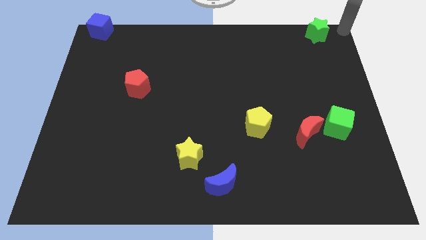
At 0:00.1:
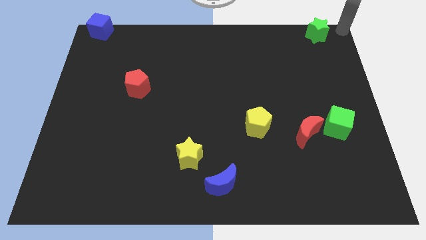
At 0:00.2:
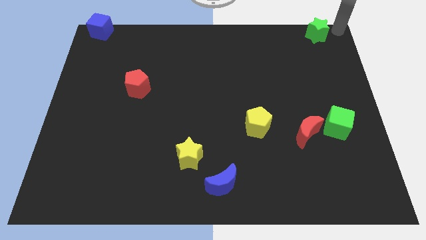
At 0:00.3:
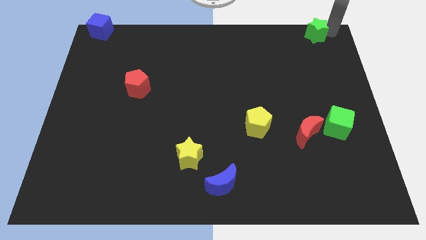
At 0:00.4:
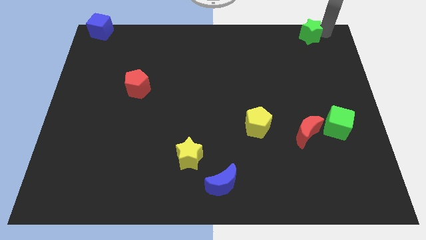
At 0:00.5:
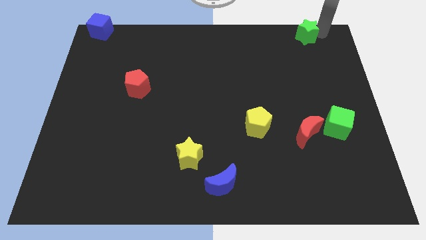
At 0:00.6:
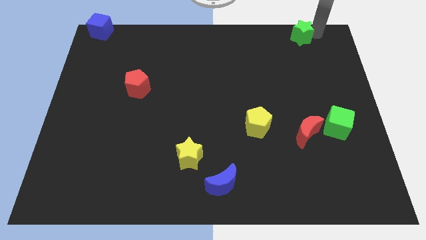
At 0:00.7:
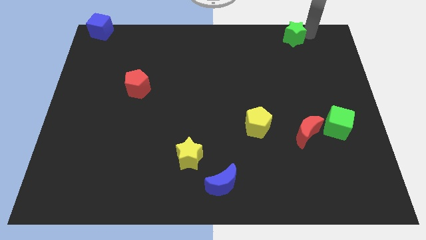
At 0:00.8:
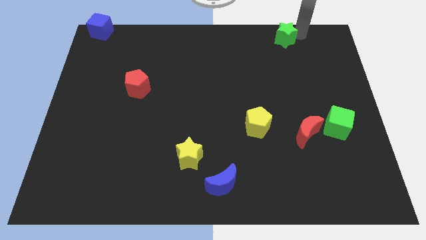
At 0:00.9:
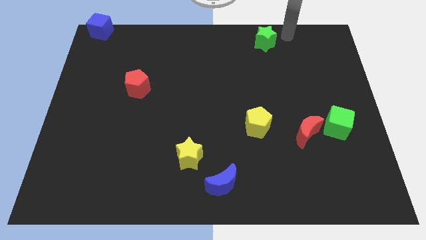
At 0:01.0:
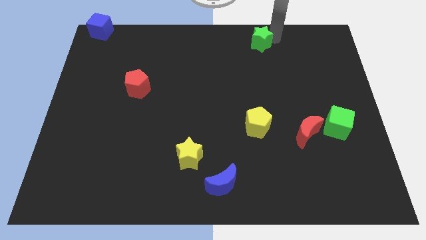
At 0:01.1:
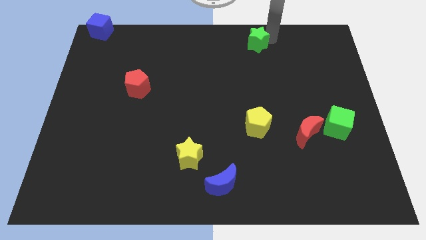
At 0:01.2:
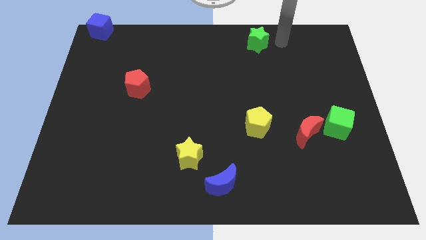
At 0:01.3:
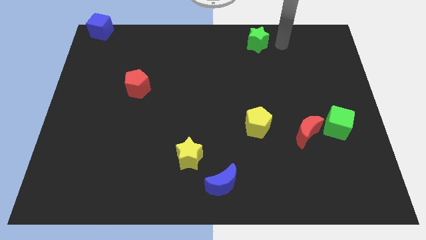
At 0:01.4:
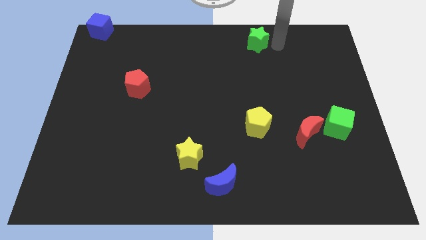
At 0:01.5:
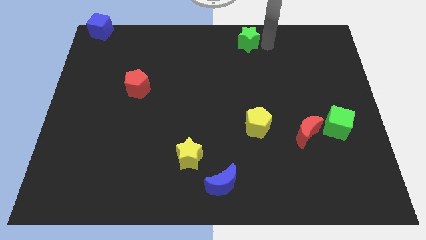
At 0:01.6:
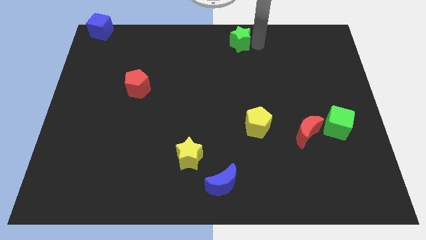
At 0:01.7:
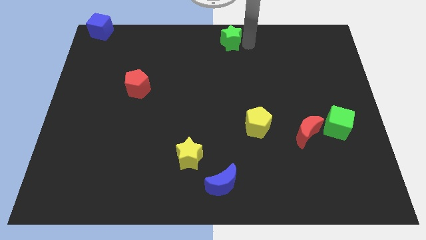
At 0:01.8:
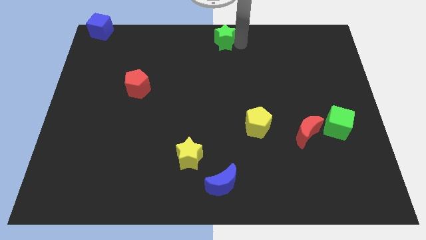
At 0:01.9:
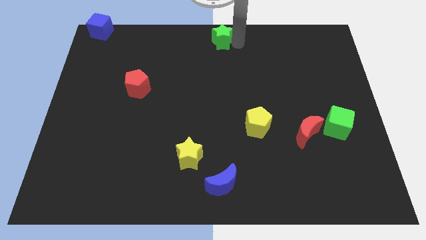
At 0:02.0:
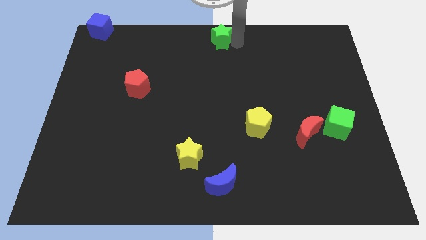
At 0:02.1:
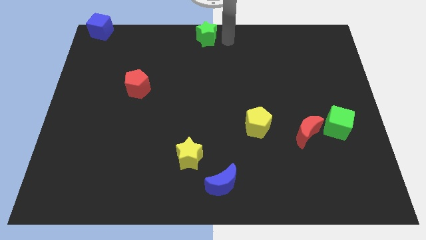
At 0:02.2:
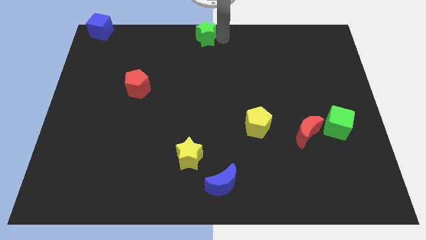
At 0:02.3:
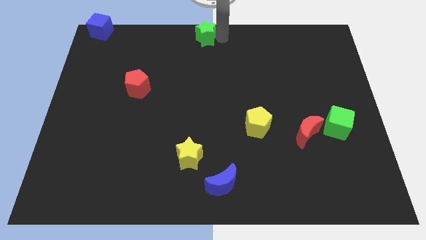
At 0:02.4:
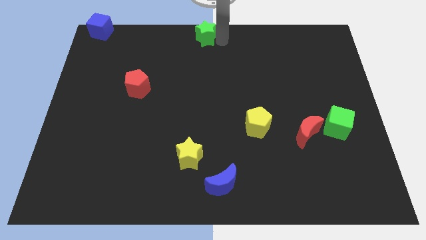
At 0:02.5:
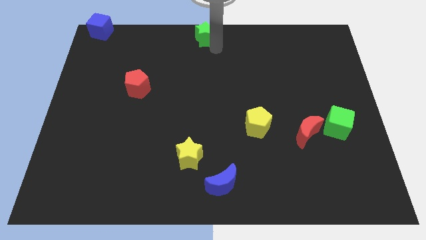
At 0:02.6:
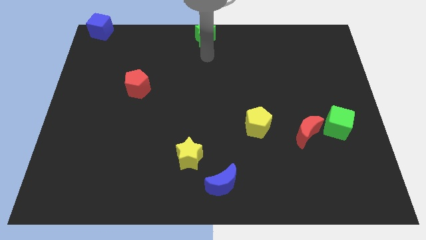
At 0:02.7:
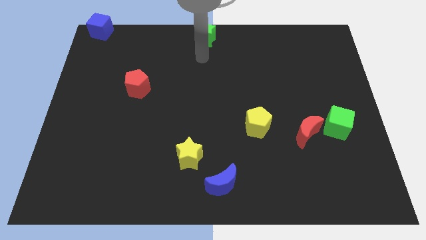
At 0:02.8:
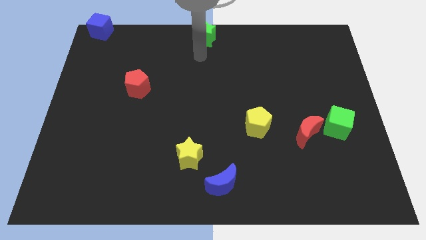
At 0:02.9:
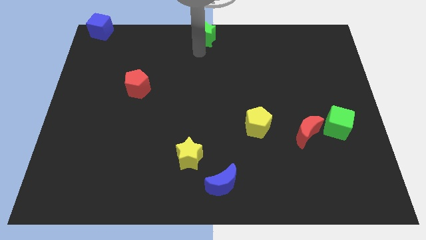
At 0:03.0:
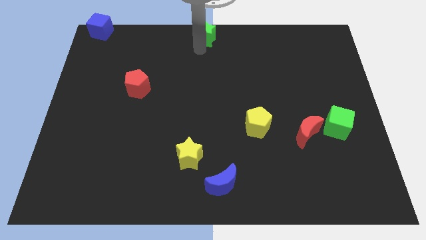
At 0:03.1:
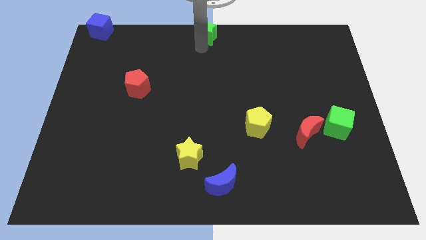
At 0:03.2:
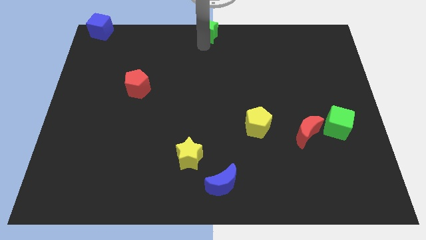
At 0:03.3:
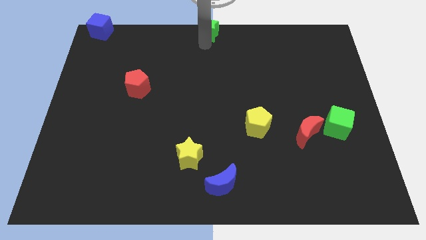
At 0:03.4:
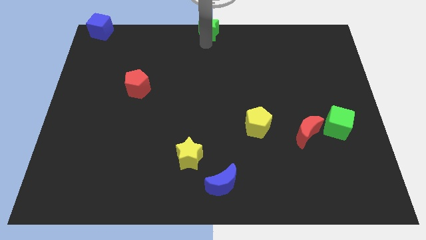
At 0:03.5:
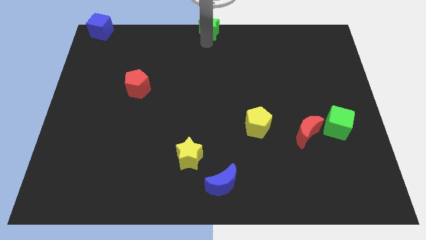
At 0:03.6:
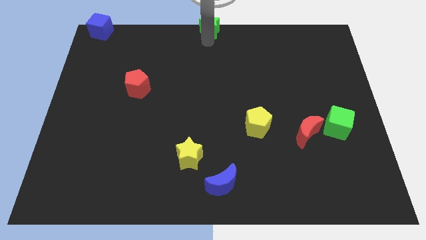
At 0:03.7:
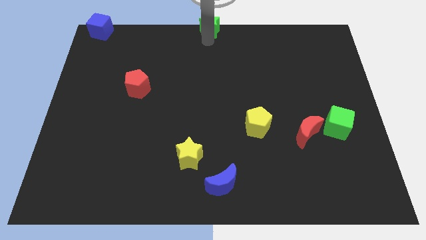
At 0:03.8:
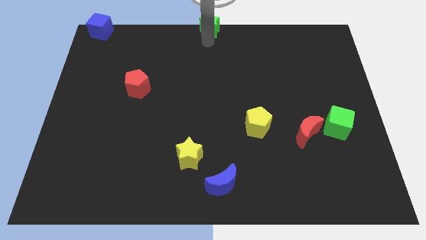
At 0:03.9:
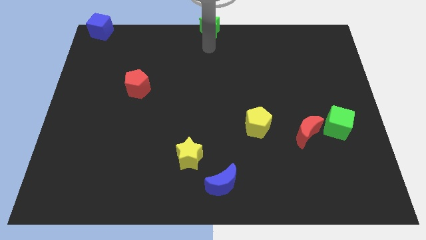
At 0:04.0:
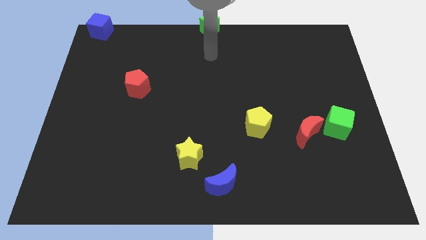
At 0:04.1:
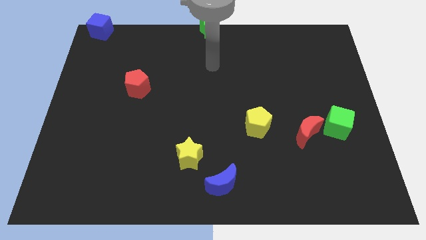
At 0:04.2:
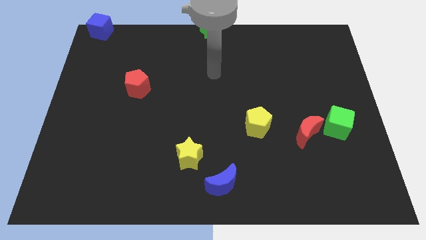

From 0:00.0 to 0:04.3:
push the green star to the top middle of the board

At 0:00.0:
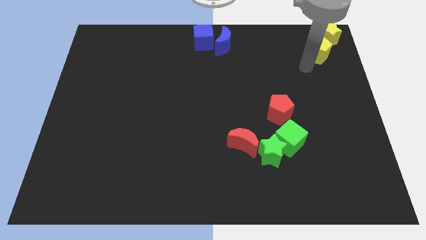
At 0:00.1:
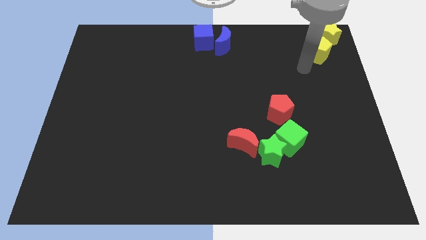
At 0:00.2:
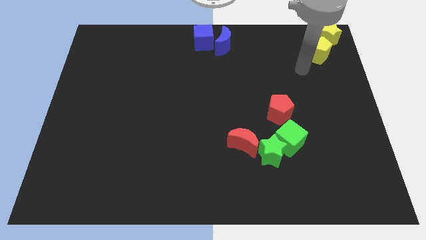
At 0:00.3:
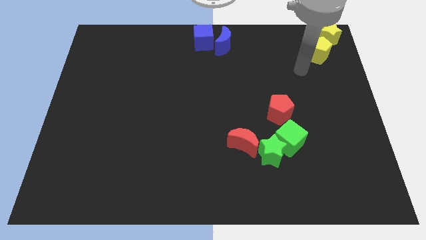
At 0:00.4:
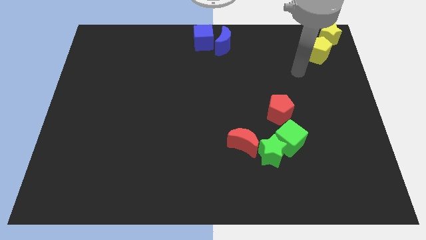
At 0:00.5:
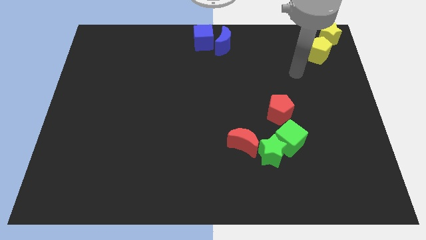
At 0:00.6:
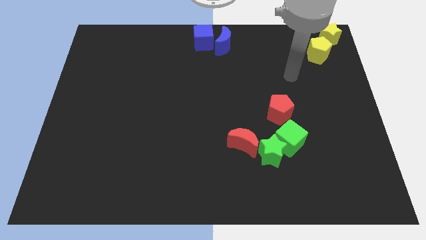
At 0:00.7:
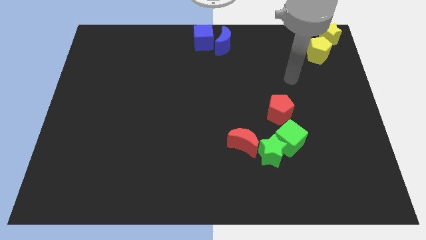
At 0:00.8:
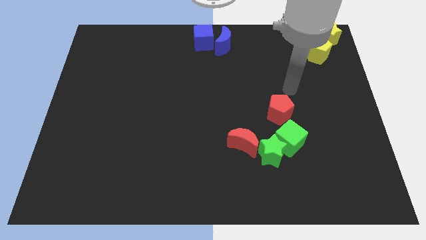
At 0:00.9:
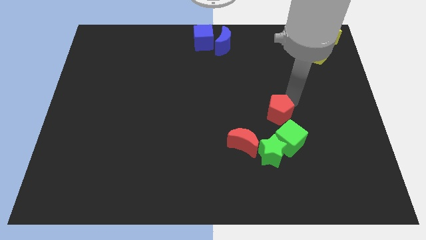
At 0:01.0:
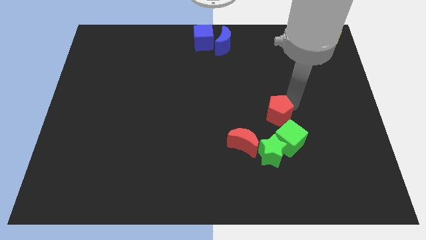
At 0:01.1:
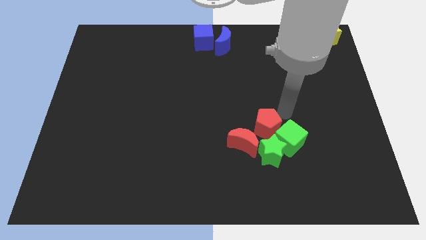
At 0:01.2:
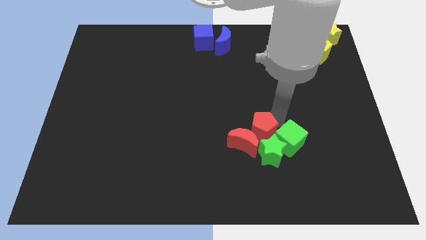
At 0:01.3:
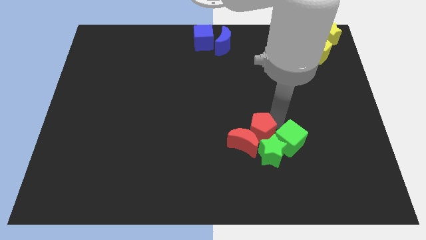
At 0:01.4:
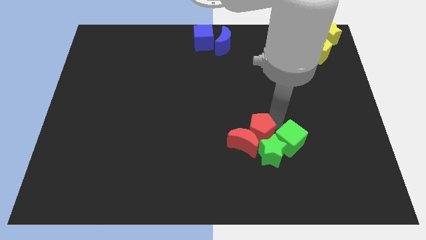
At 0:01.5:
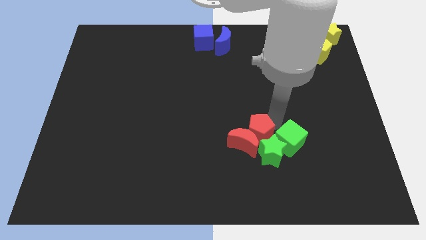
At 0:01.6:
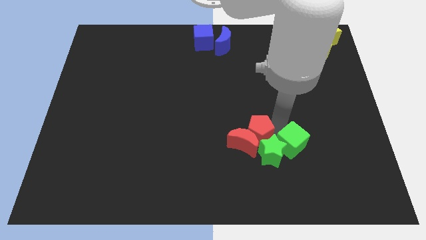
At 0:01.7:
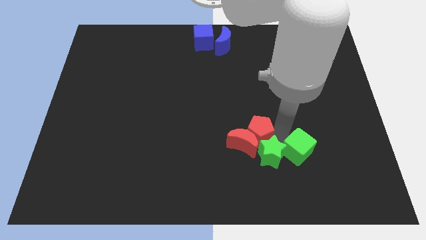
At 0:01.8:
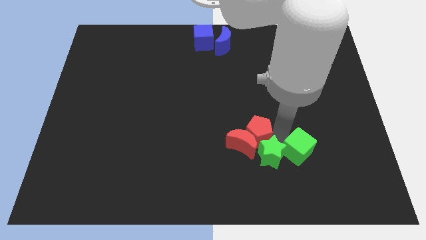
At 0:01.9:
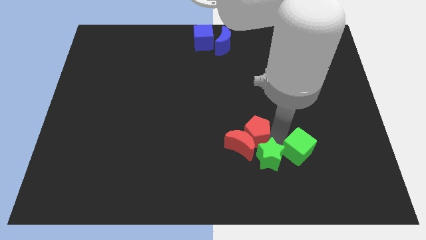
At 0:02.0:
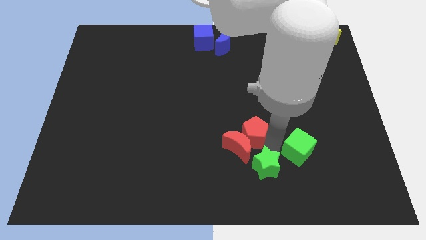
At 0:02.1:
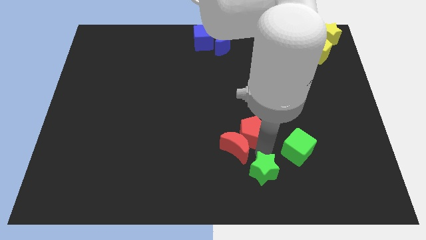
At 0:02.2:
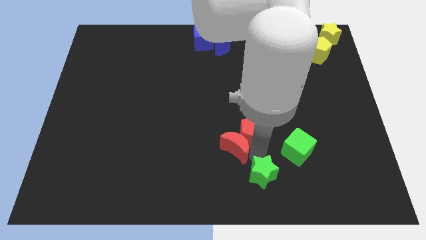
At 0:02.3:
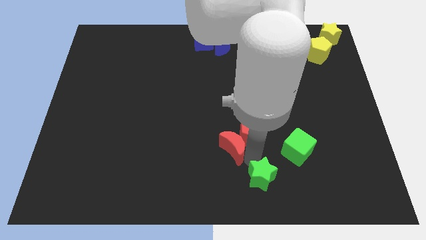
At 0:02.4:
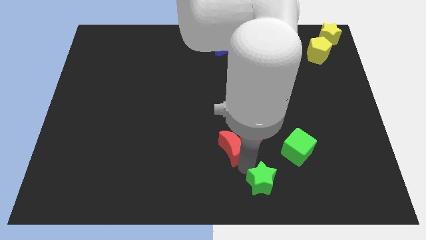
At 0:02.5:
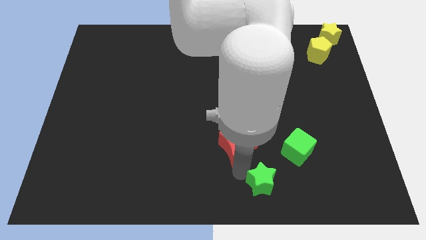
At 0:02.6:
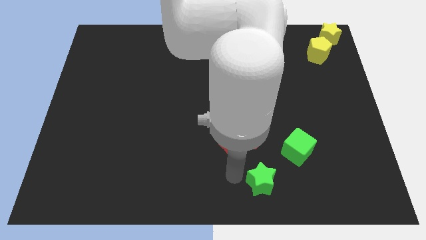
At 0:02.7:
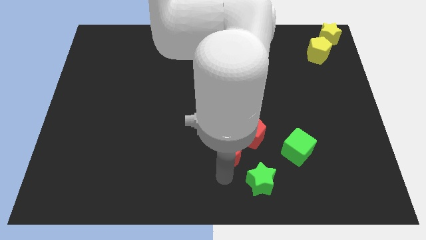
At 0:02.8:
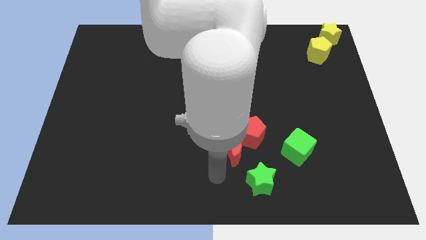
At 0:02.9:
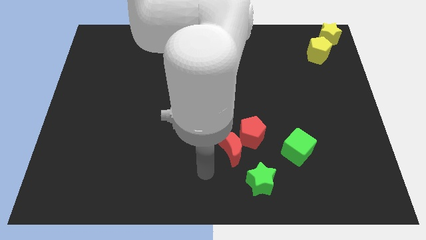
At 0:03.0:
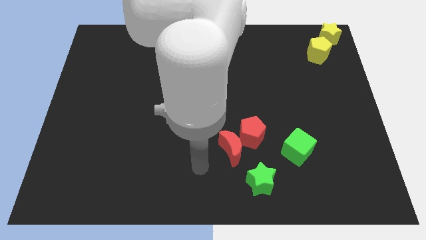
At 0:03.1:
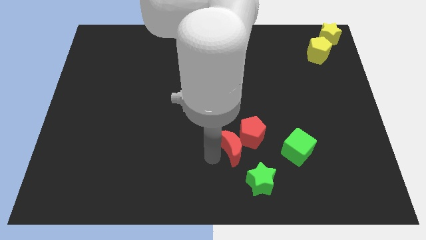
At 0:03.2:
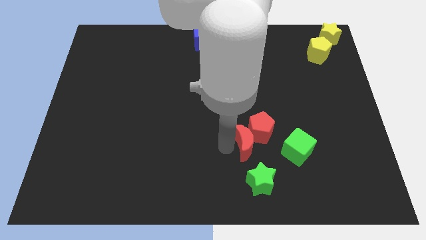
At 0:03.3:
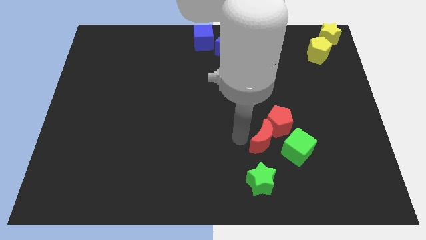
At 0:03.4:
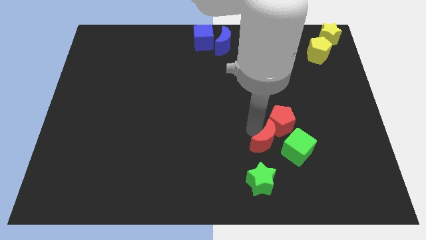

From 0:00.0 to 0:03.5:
group up the red blocks separately from the green blocks

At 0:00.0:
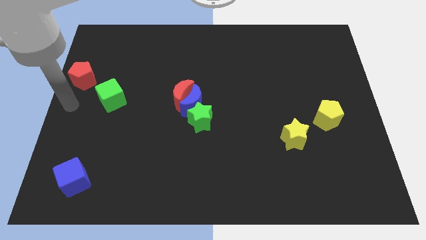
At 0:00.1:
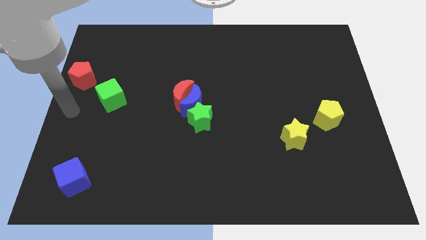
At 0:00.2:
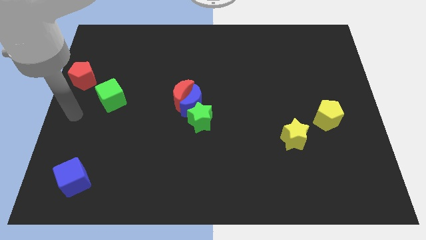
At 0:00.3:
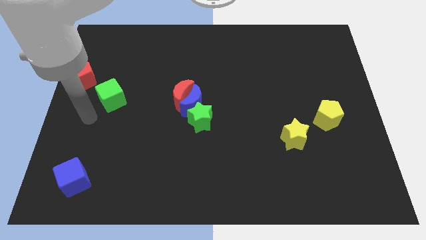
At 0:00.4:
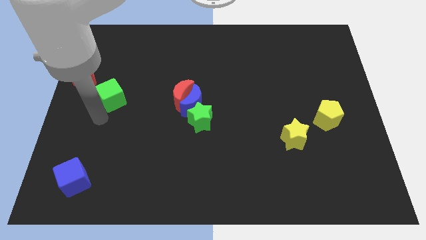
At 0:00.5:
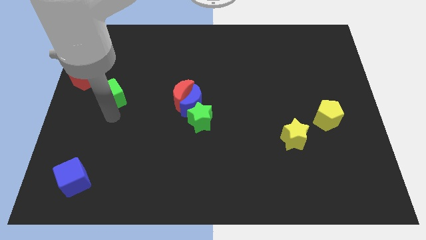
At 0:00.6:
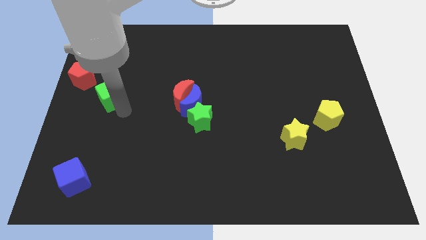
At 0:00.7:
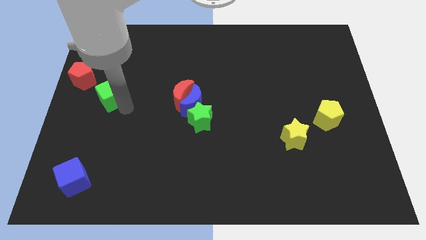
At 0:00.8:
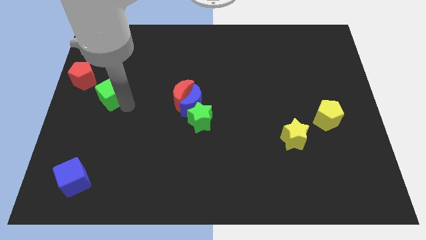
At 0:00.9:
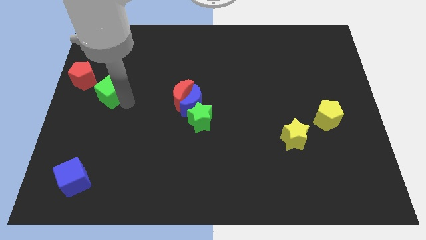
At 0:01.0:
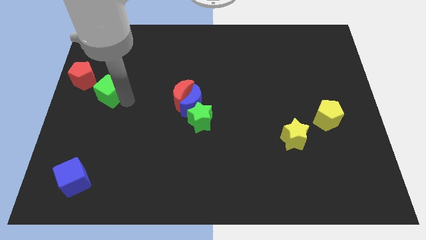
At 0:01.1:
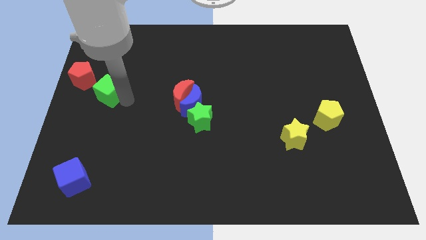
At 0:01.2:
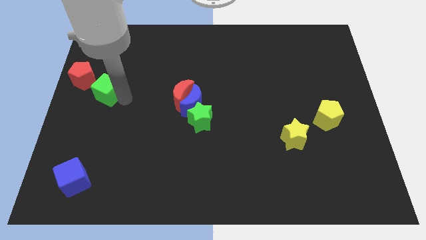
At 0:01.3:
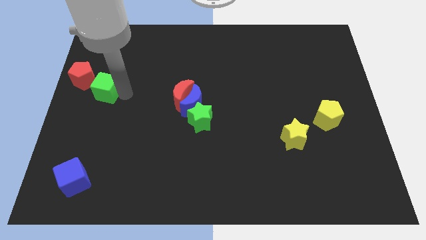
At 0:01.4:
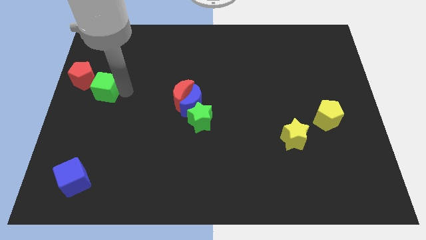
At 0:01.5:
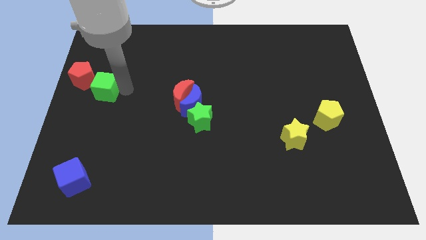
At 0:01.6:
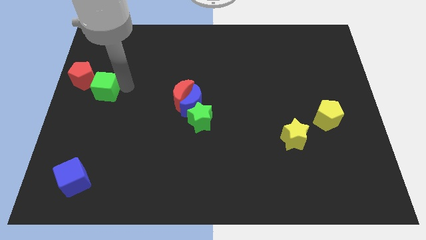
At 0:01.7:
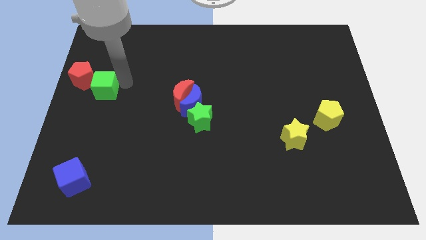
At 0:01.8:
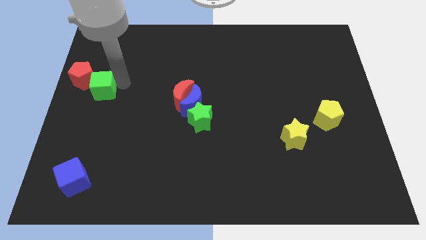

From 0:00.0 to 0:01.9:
push green cube close to red pentagon
